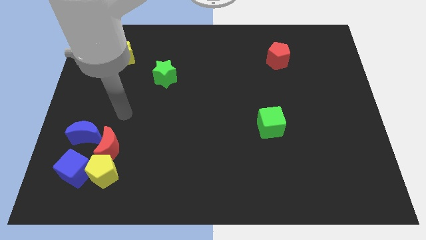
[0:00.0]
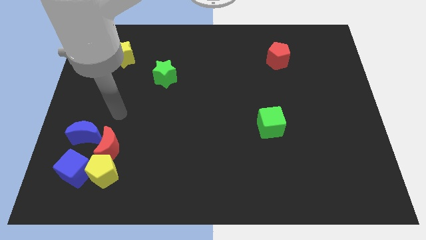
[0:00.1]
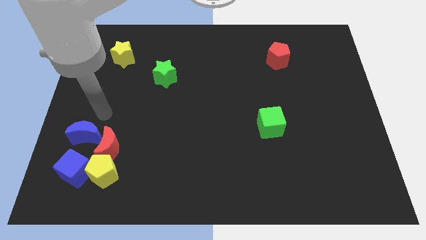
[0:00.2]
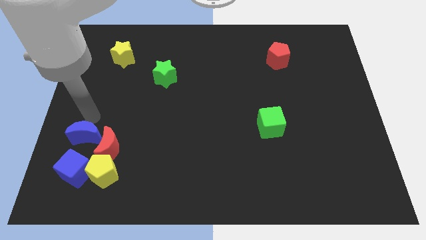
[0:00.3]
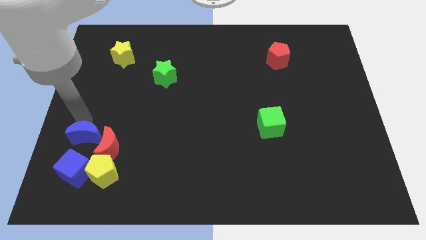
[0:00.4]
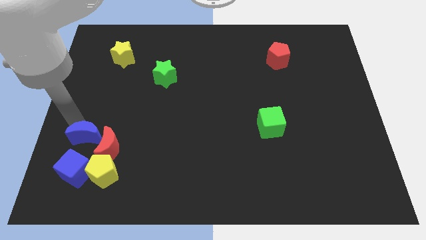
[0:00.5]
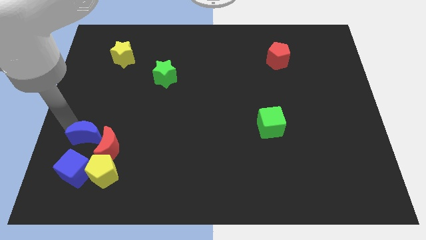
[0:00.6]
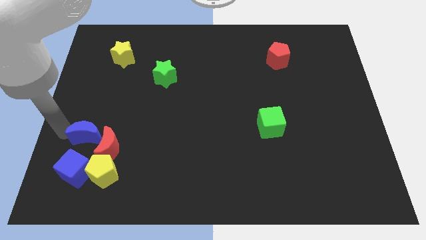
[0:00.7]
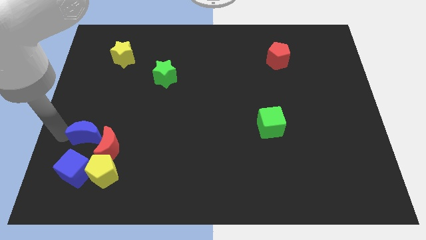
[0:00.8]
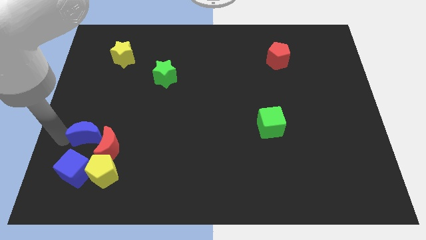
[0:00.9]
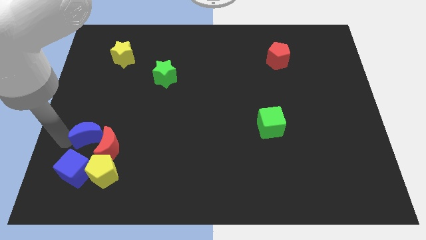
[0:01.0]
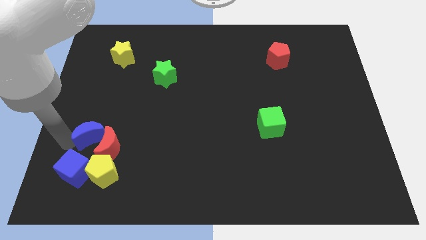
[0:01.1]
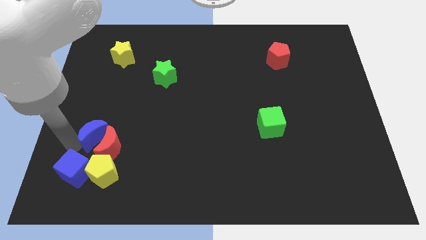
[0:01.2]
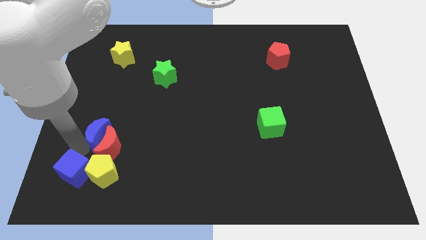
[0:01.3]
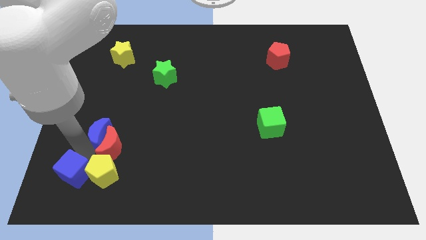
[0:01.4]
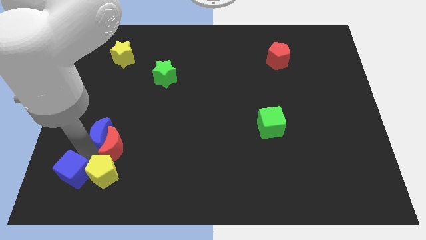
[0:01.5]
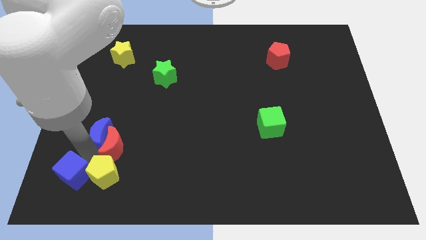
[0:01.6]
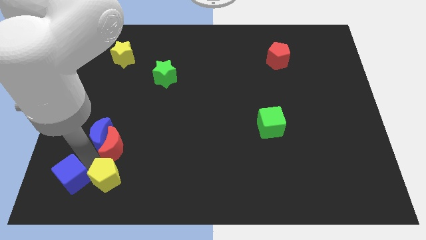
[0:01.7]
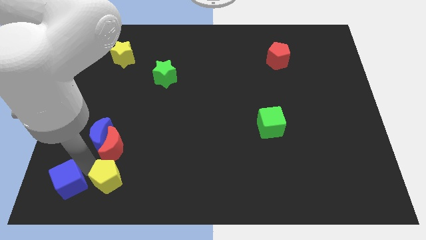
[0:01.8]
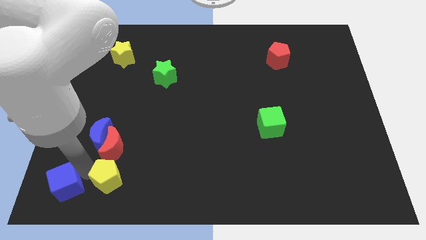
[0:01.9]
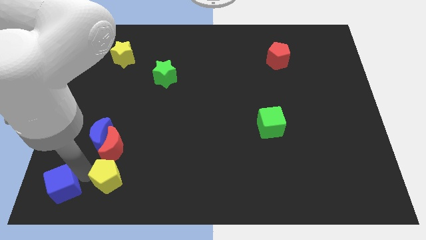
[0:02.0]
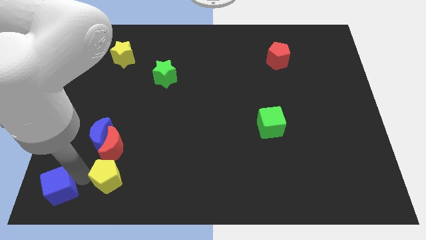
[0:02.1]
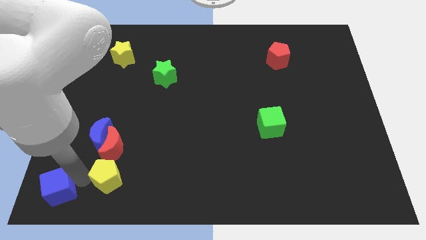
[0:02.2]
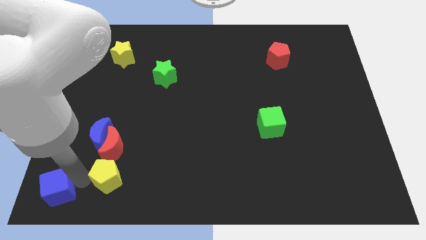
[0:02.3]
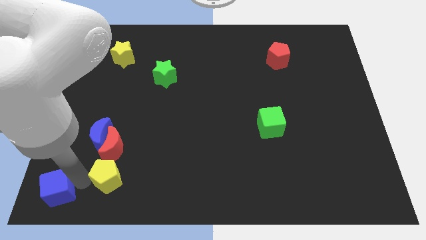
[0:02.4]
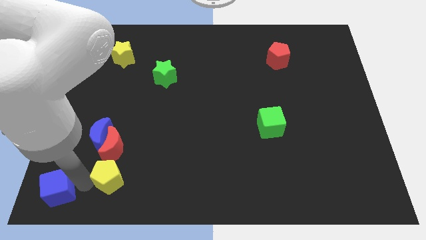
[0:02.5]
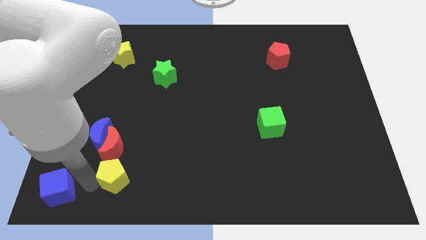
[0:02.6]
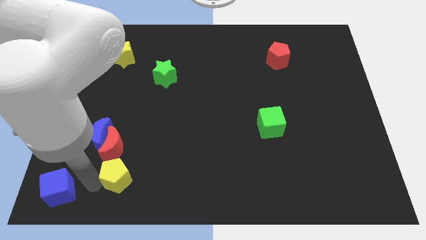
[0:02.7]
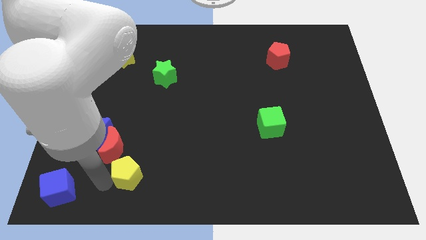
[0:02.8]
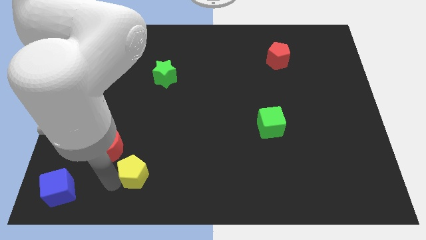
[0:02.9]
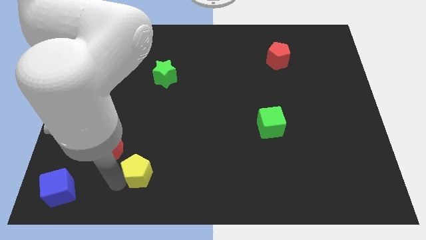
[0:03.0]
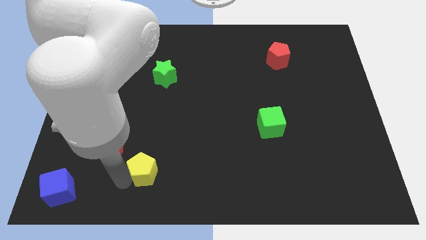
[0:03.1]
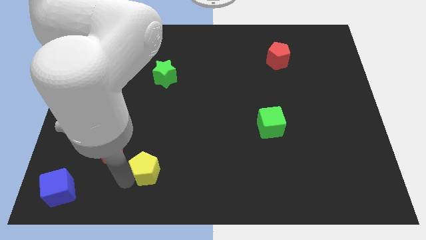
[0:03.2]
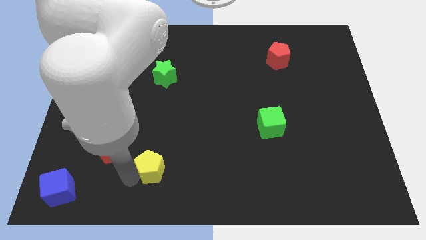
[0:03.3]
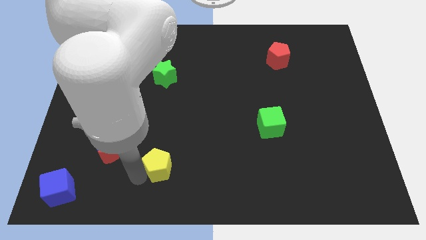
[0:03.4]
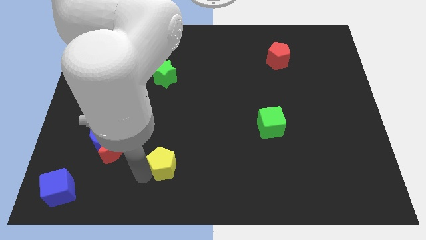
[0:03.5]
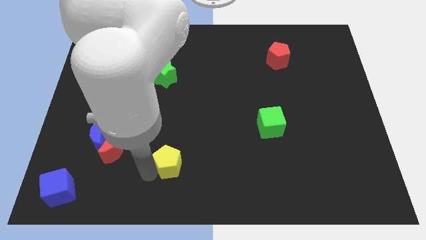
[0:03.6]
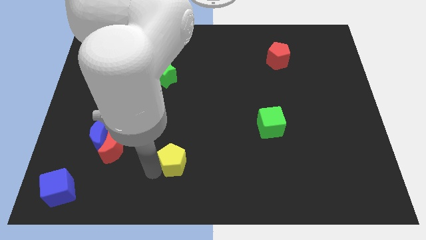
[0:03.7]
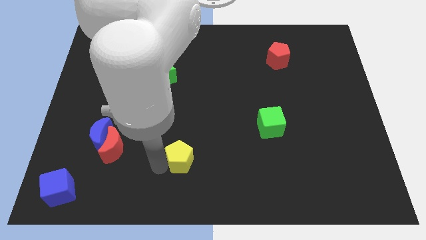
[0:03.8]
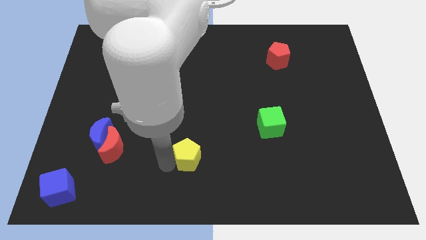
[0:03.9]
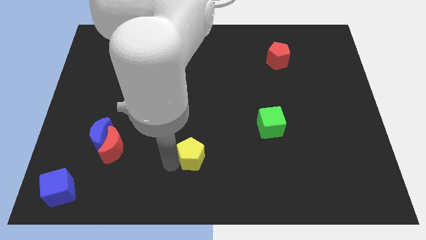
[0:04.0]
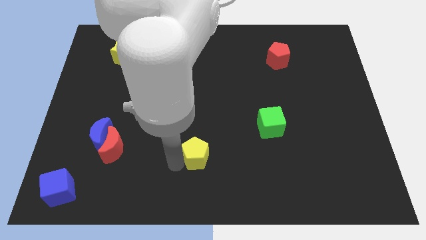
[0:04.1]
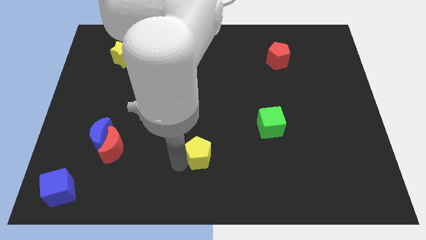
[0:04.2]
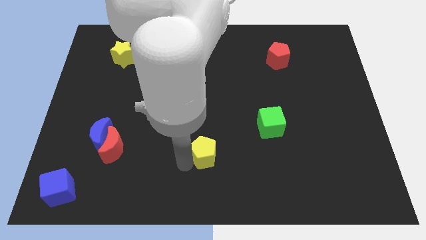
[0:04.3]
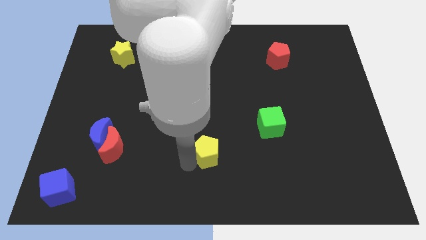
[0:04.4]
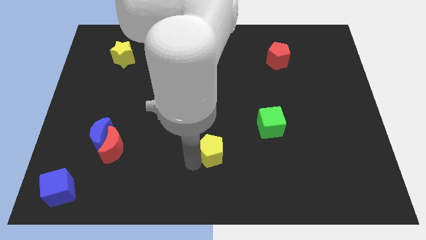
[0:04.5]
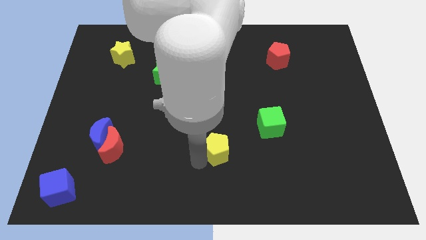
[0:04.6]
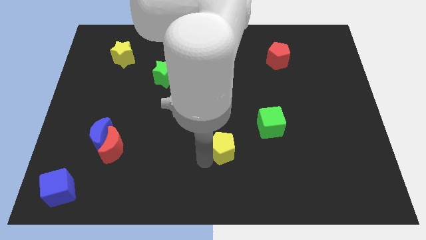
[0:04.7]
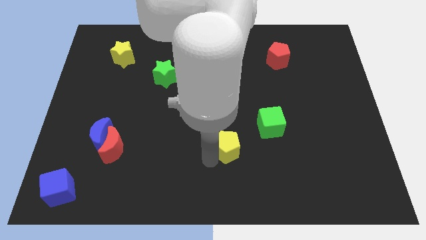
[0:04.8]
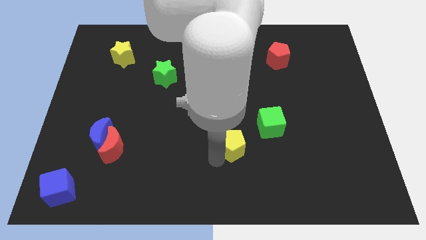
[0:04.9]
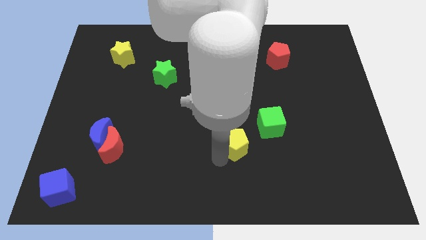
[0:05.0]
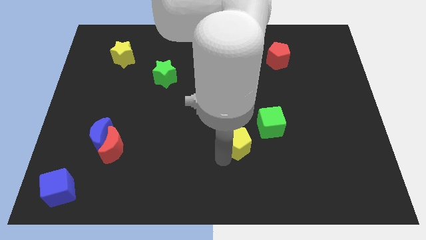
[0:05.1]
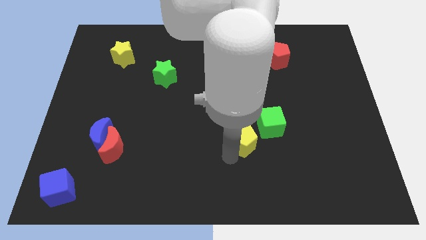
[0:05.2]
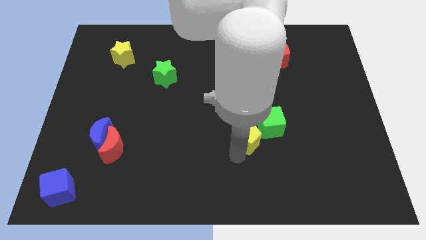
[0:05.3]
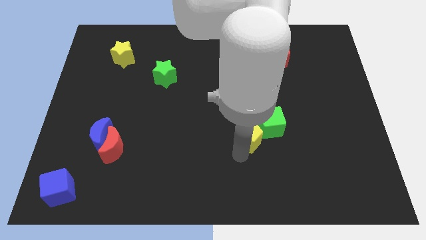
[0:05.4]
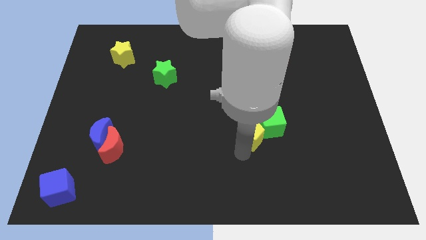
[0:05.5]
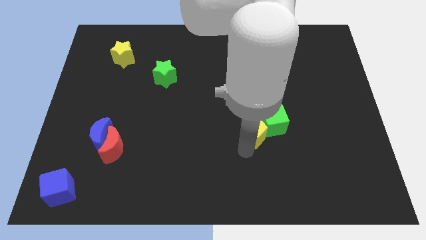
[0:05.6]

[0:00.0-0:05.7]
slide the yellow pentagon close to the green cube

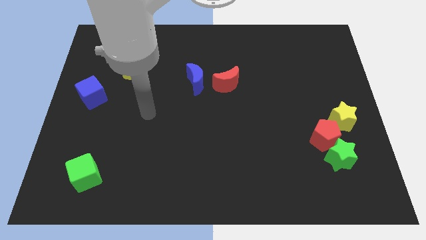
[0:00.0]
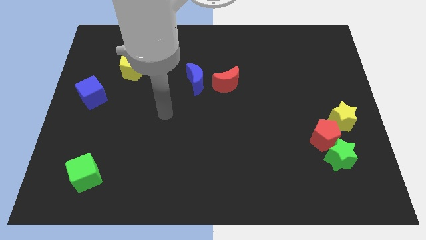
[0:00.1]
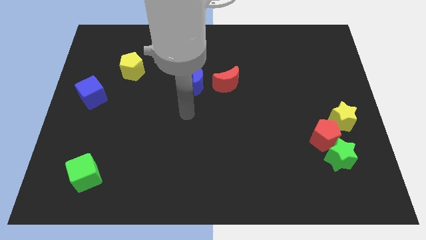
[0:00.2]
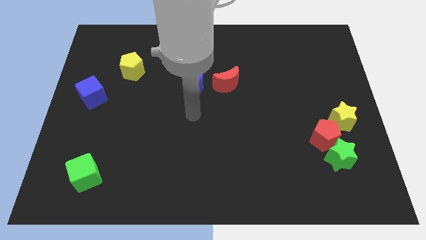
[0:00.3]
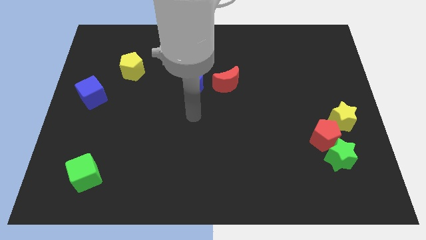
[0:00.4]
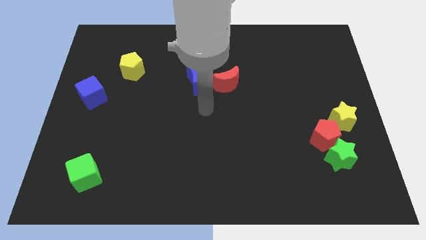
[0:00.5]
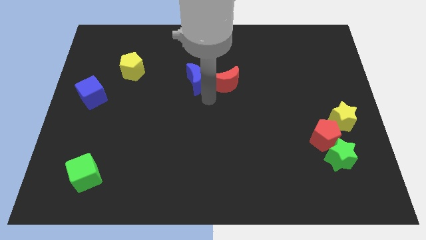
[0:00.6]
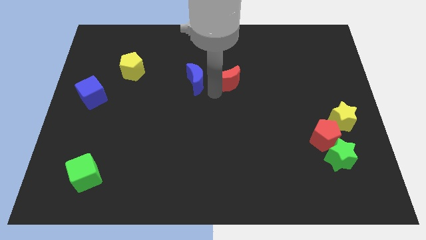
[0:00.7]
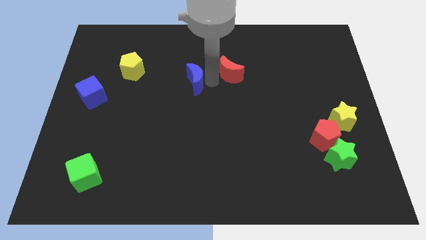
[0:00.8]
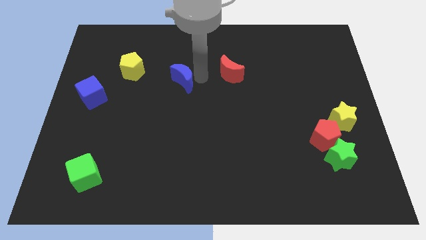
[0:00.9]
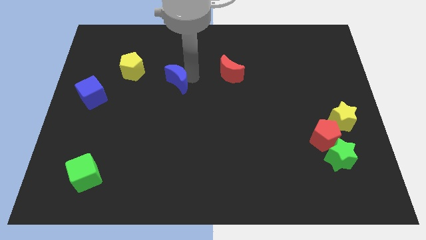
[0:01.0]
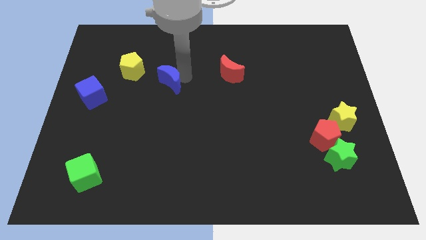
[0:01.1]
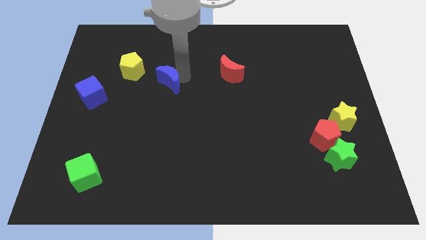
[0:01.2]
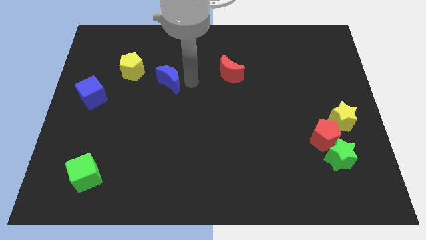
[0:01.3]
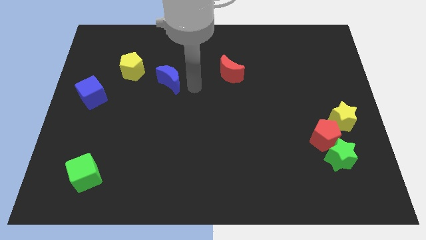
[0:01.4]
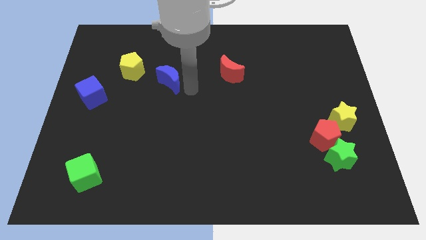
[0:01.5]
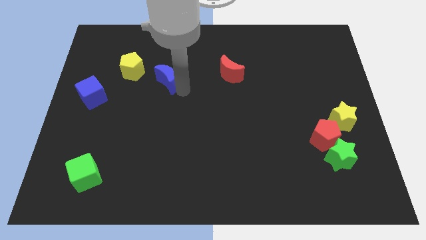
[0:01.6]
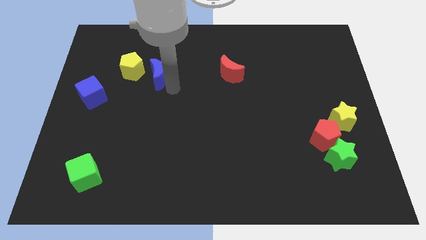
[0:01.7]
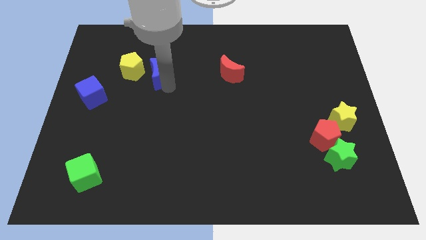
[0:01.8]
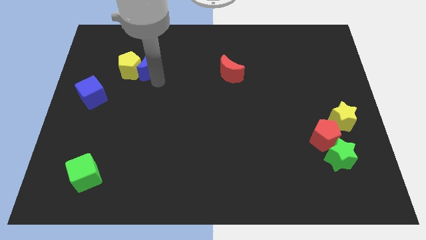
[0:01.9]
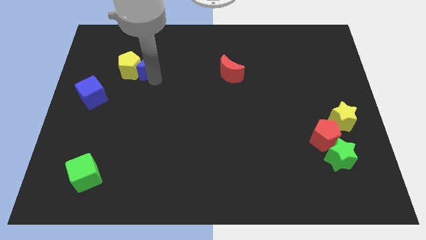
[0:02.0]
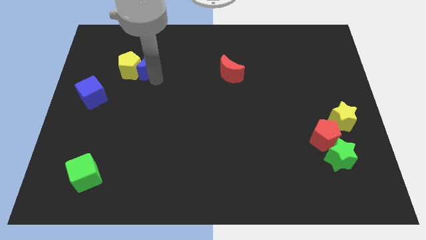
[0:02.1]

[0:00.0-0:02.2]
push the blue moon towards the yellow pentagon

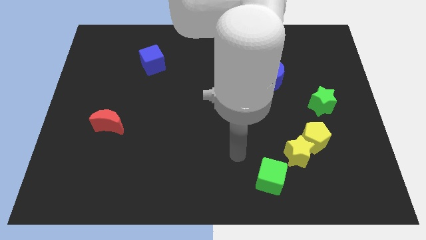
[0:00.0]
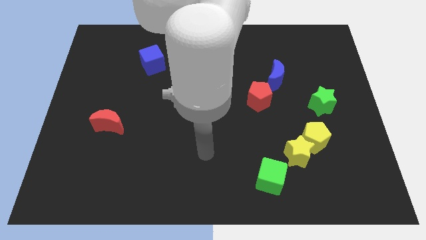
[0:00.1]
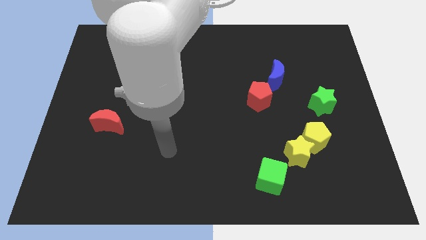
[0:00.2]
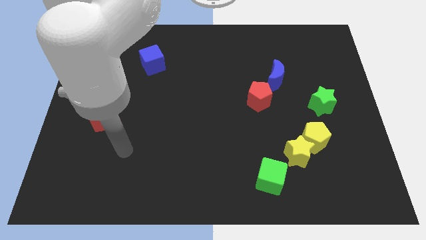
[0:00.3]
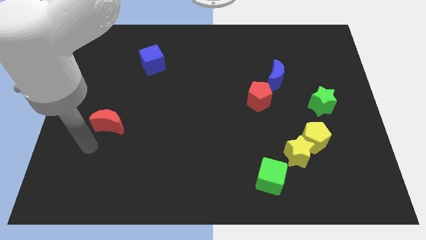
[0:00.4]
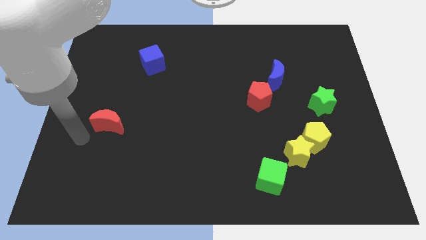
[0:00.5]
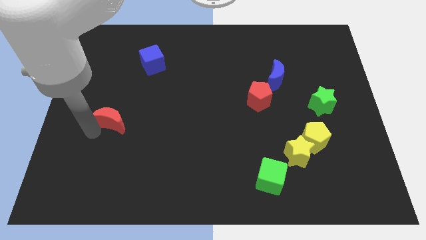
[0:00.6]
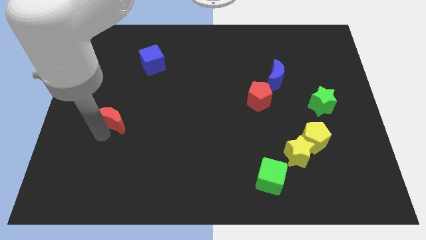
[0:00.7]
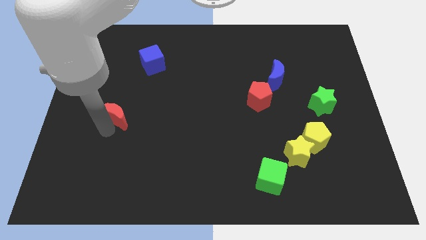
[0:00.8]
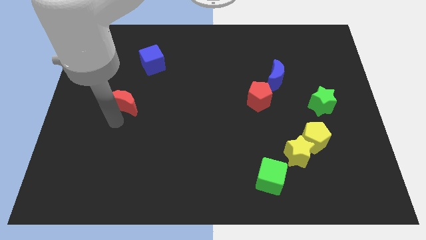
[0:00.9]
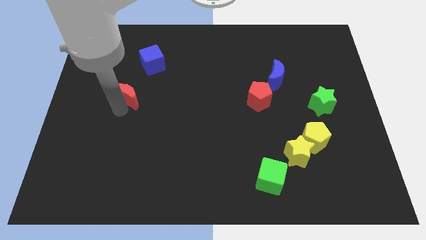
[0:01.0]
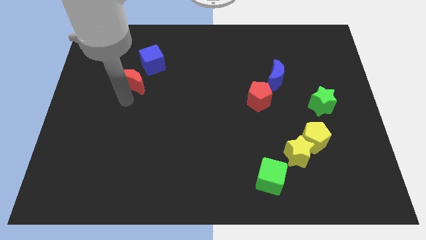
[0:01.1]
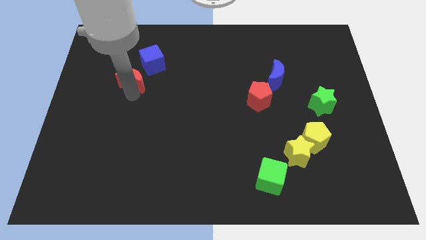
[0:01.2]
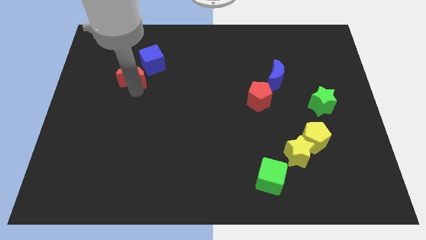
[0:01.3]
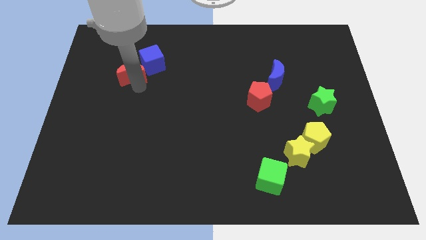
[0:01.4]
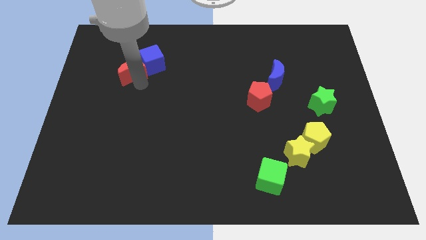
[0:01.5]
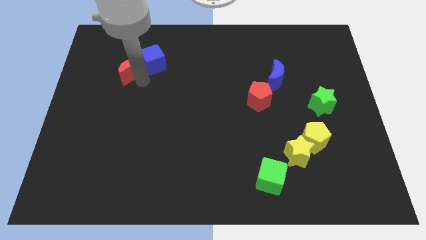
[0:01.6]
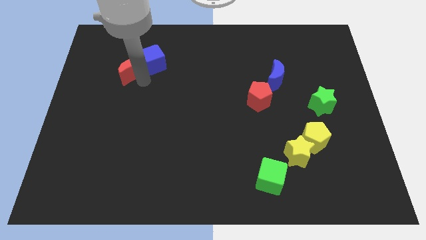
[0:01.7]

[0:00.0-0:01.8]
slide the red moon close to the blue cube
